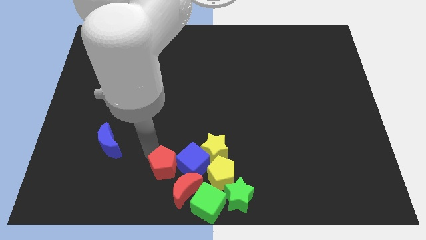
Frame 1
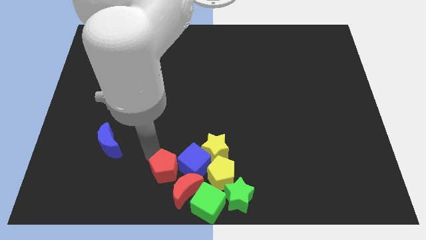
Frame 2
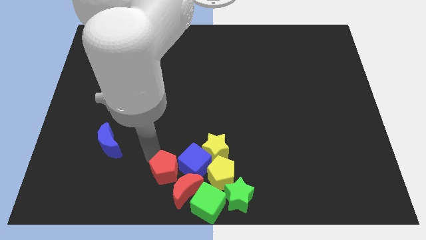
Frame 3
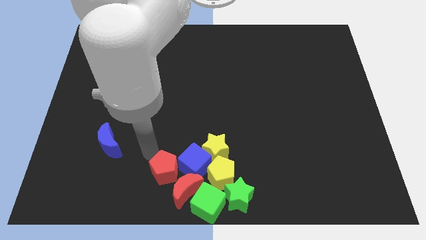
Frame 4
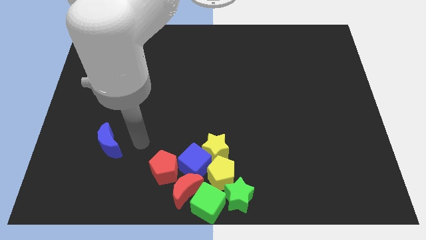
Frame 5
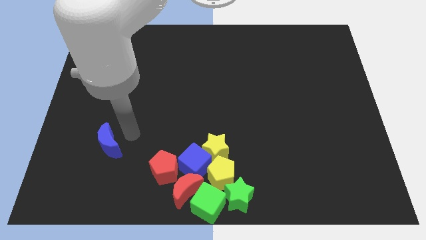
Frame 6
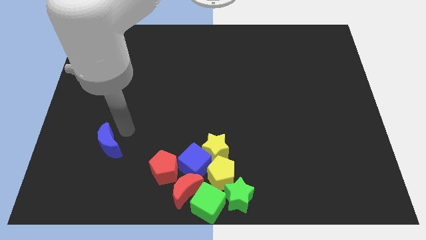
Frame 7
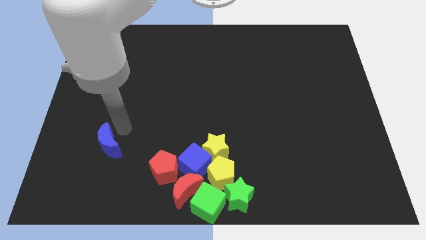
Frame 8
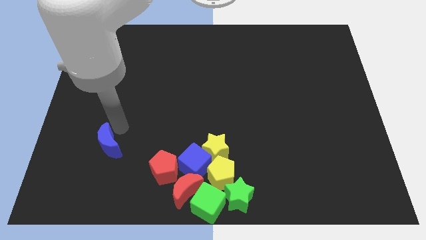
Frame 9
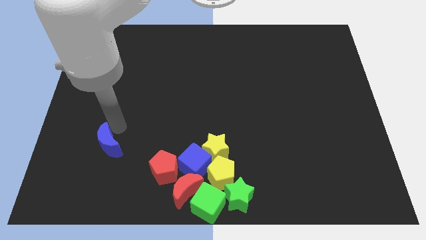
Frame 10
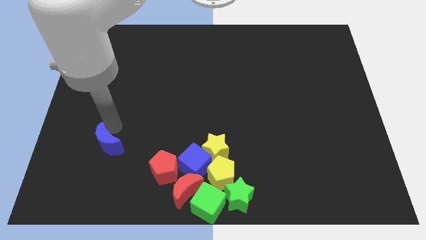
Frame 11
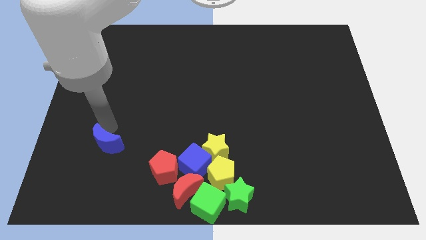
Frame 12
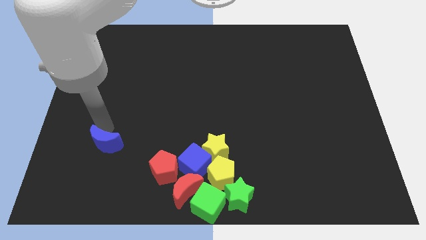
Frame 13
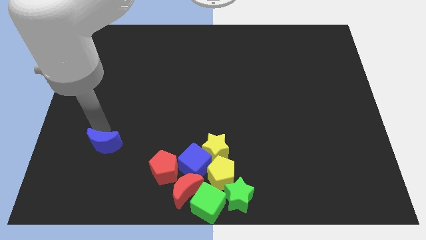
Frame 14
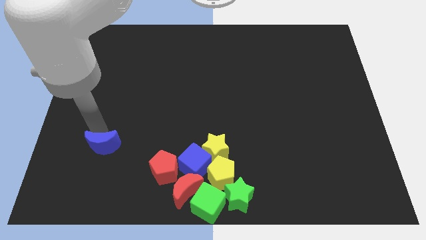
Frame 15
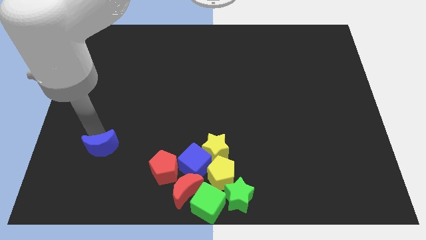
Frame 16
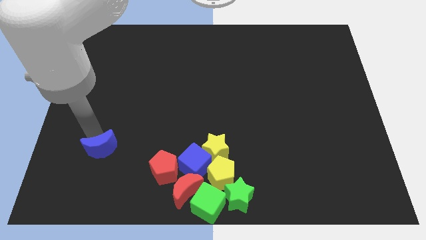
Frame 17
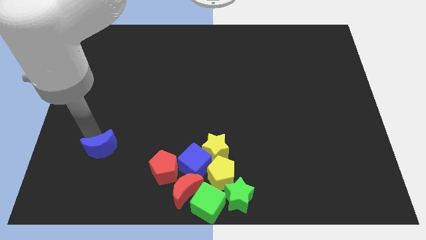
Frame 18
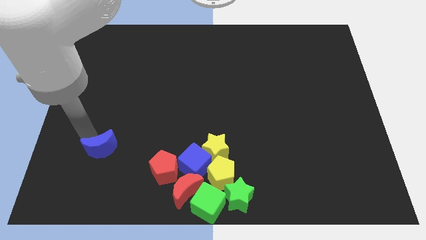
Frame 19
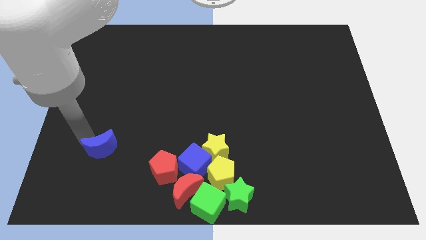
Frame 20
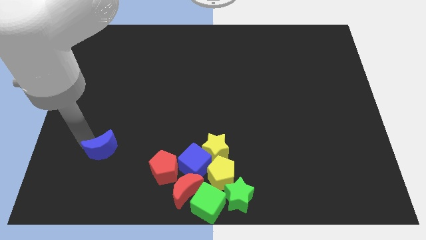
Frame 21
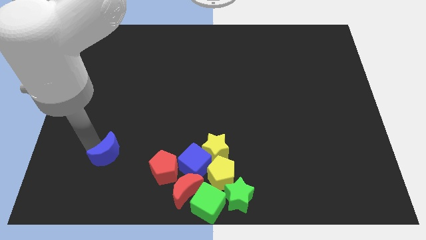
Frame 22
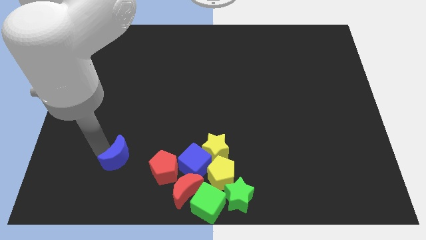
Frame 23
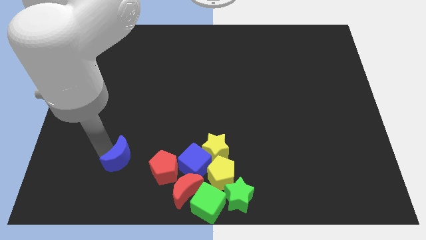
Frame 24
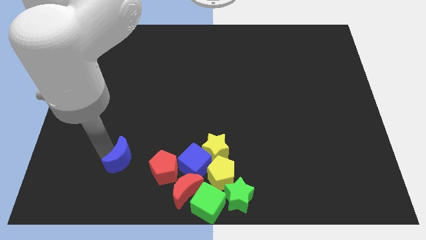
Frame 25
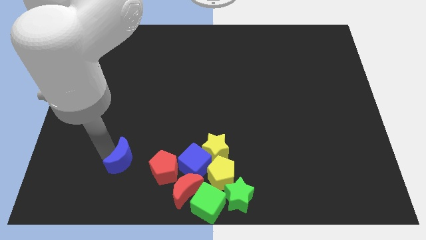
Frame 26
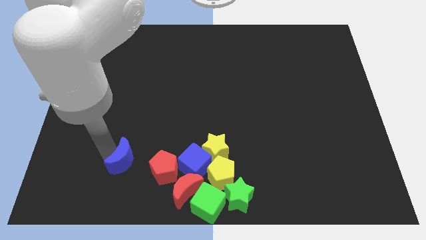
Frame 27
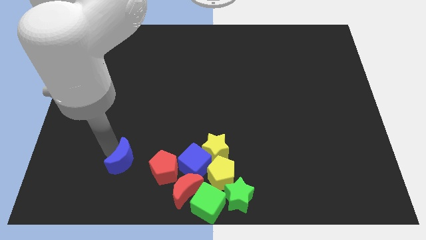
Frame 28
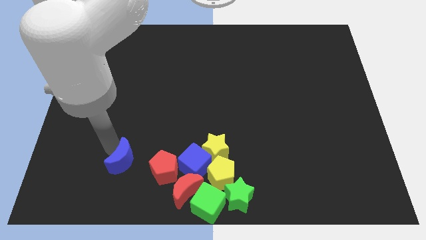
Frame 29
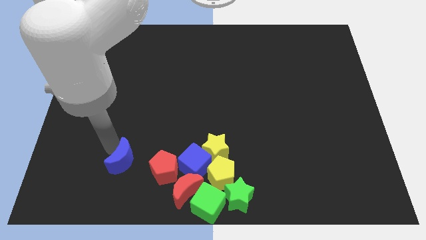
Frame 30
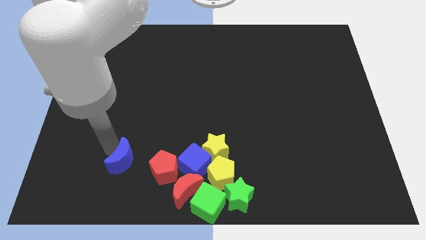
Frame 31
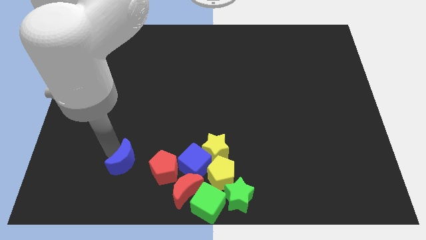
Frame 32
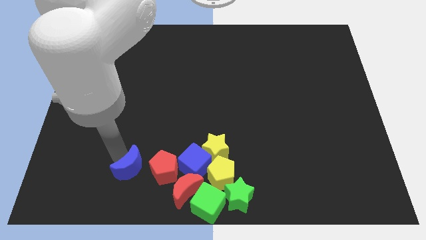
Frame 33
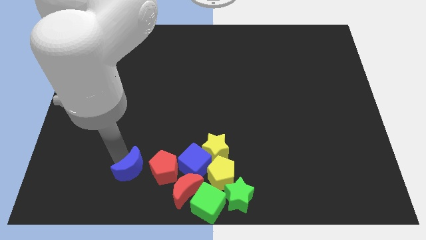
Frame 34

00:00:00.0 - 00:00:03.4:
push the blue crescent to the left of the red pentagon

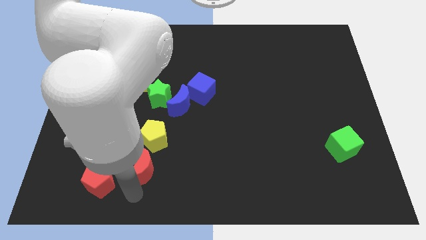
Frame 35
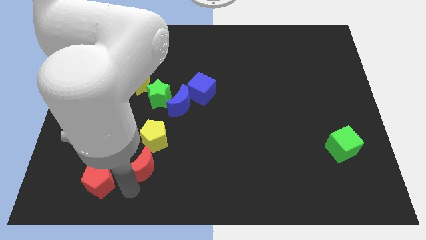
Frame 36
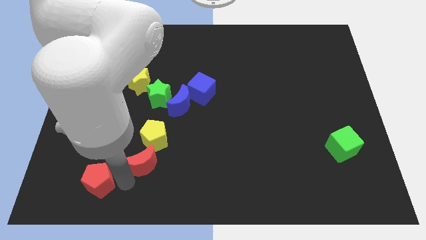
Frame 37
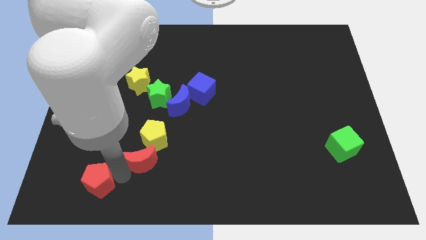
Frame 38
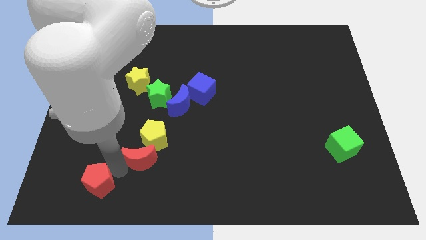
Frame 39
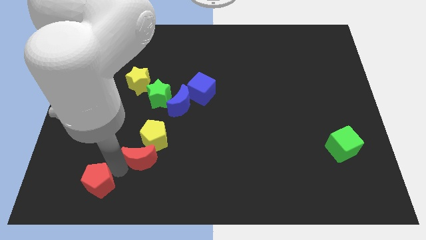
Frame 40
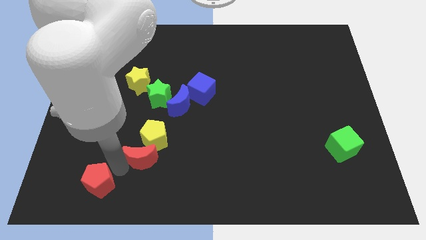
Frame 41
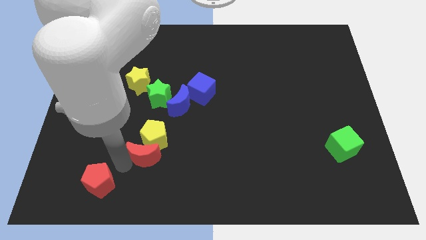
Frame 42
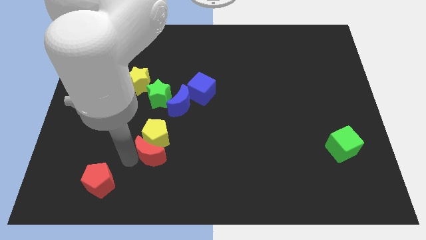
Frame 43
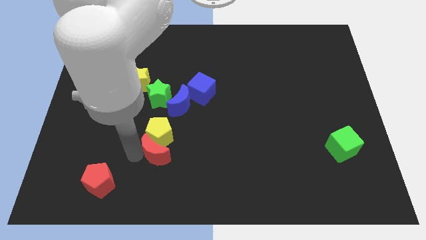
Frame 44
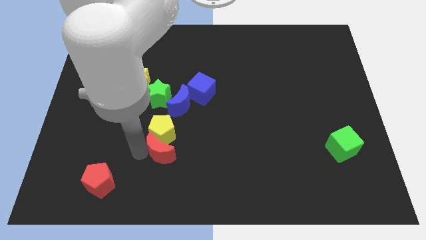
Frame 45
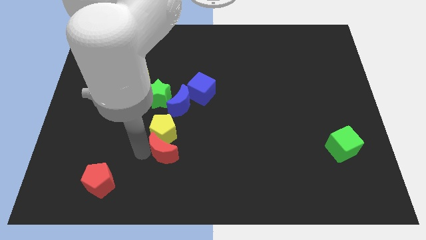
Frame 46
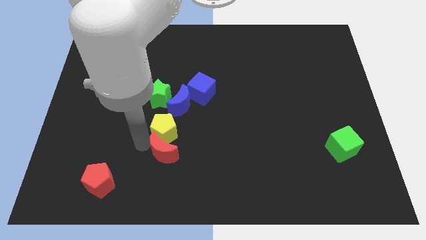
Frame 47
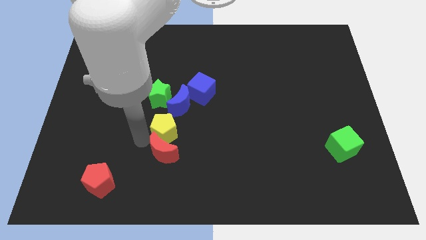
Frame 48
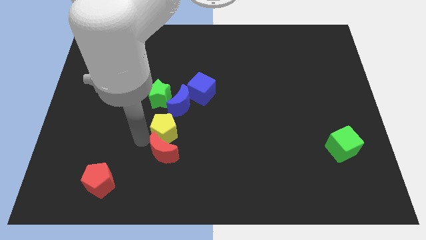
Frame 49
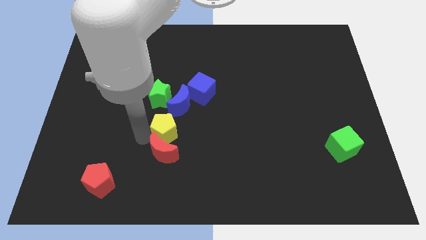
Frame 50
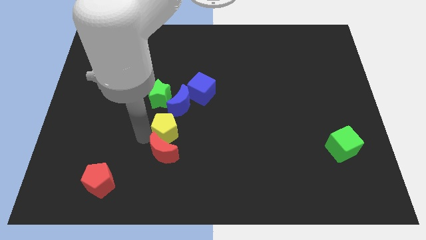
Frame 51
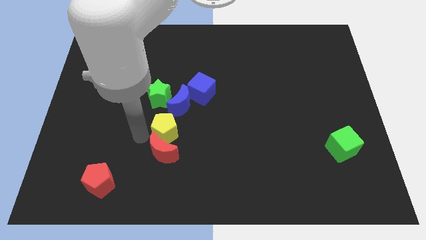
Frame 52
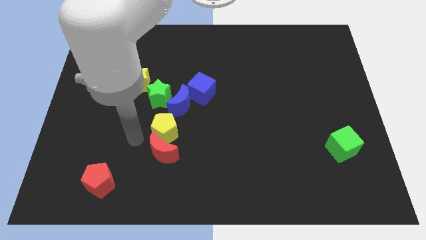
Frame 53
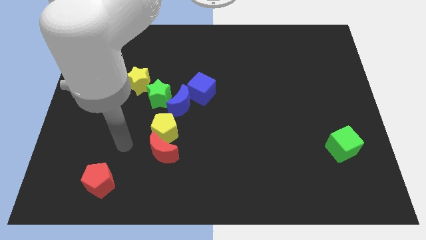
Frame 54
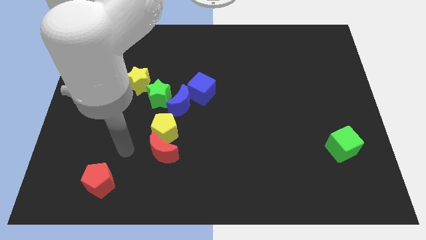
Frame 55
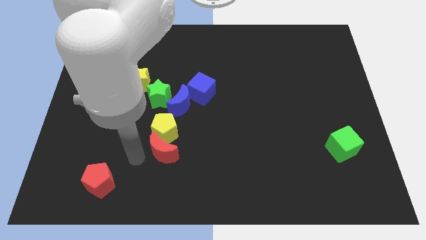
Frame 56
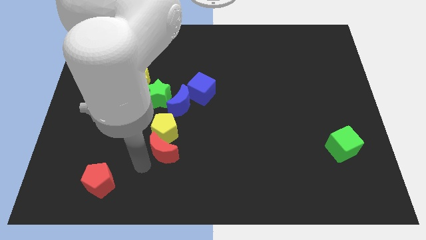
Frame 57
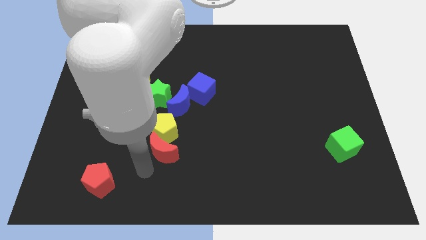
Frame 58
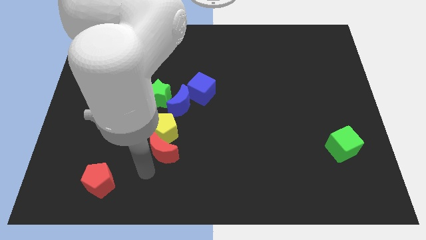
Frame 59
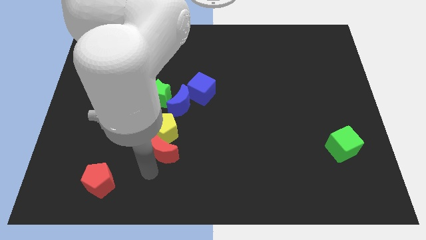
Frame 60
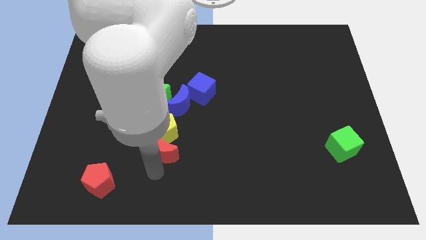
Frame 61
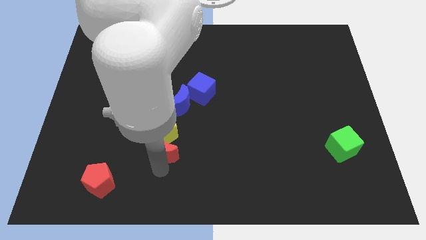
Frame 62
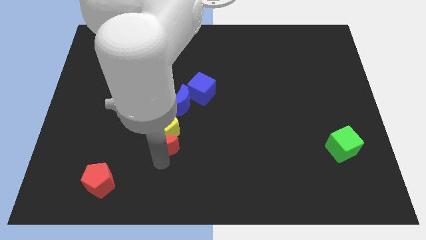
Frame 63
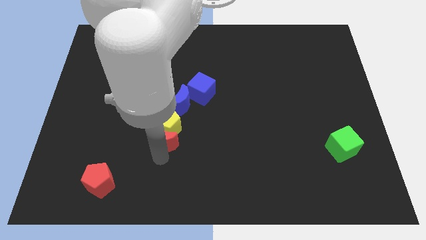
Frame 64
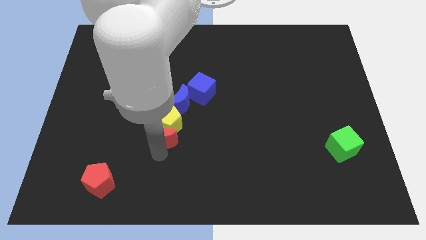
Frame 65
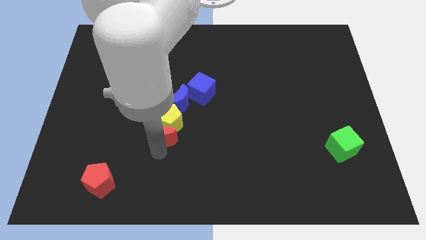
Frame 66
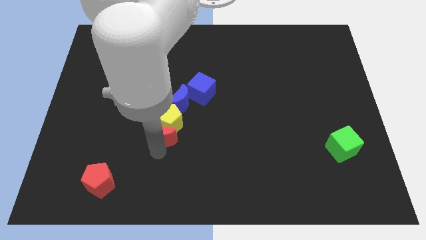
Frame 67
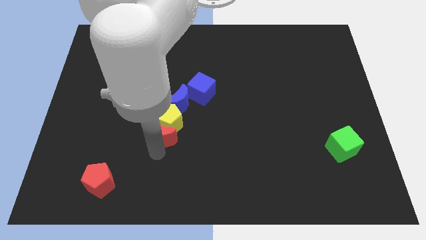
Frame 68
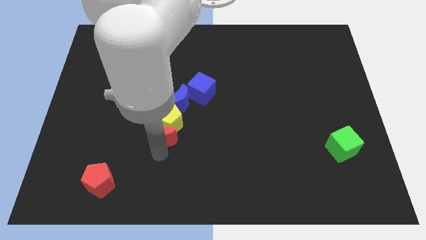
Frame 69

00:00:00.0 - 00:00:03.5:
push the red crescent with yellow pentagon below the blue crescent

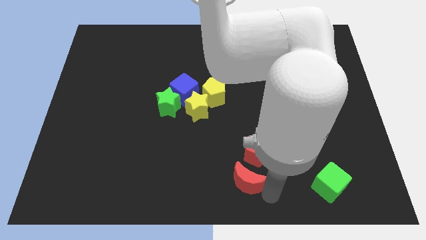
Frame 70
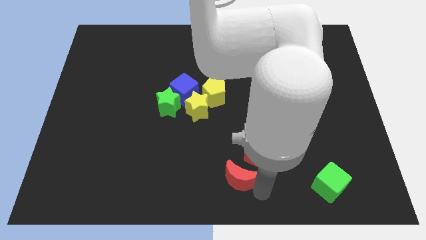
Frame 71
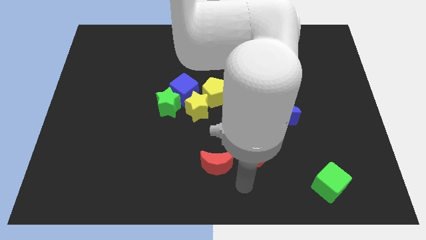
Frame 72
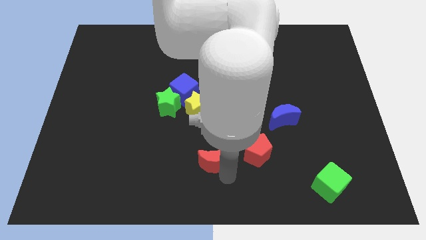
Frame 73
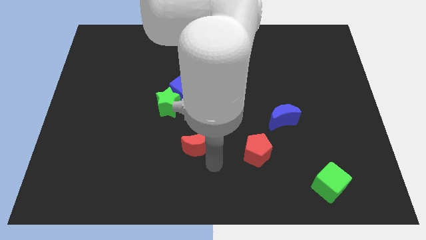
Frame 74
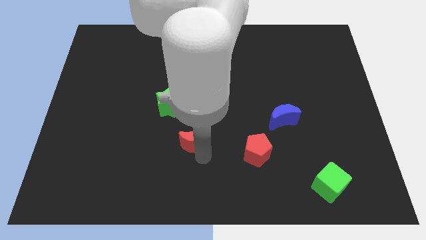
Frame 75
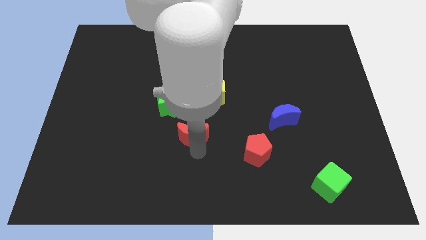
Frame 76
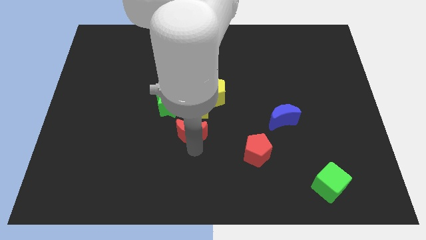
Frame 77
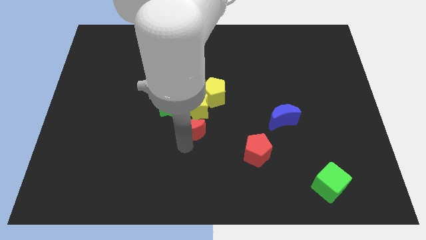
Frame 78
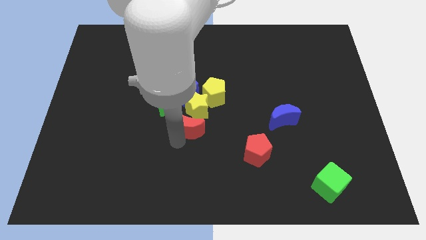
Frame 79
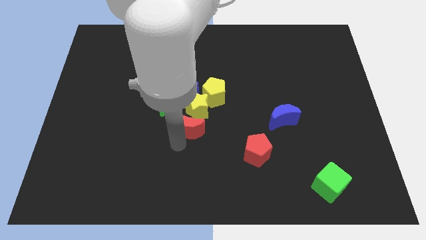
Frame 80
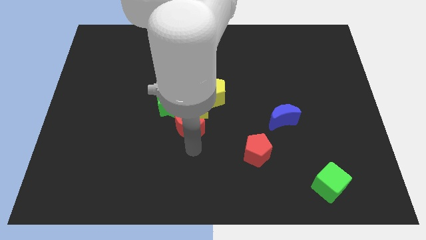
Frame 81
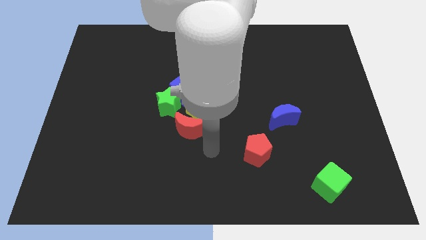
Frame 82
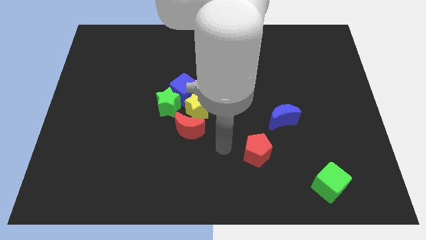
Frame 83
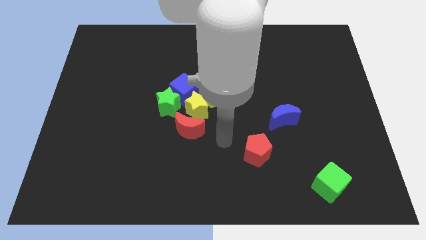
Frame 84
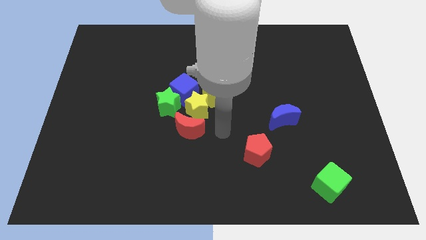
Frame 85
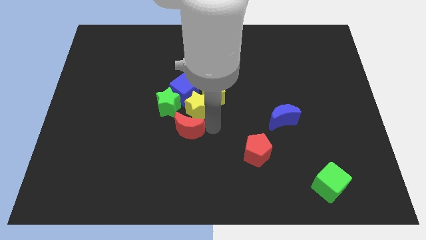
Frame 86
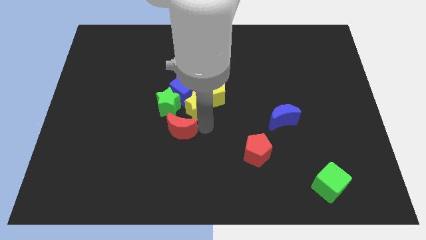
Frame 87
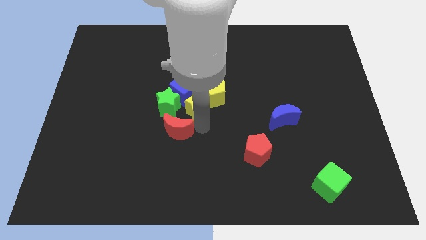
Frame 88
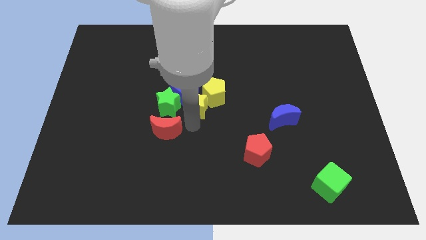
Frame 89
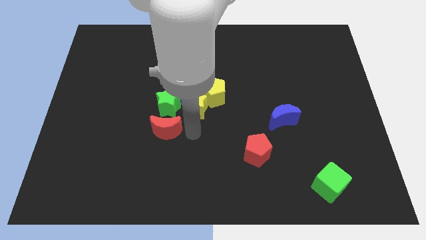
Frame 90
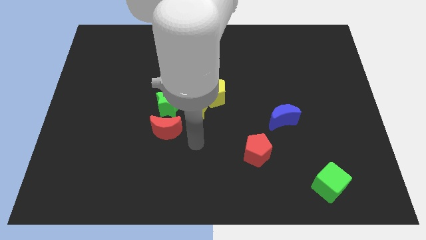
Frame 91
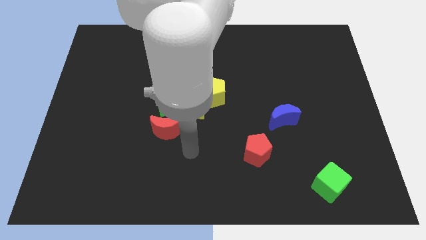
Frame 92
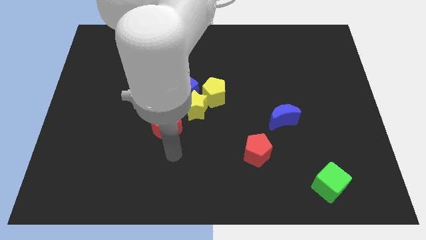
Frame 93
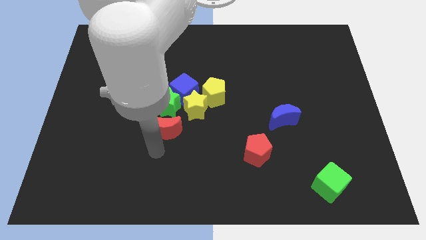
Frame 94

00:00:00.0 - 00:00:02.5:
push red moon into group of blocks
